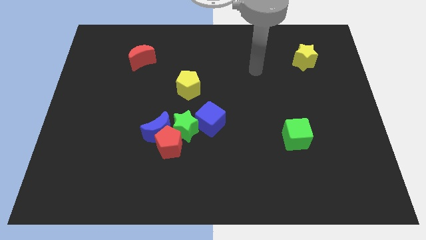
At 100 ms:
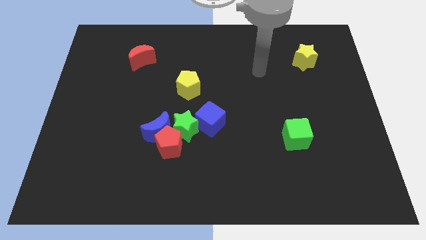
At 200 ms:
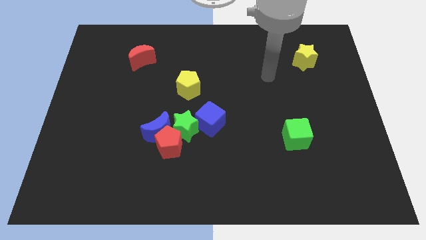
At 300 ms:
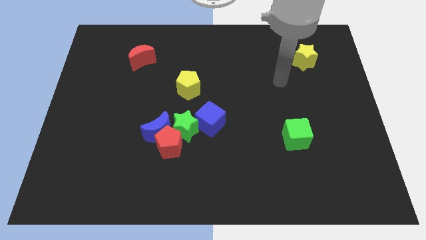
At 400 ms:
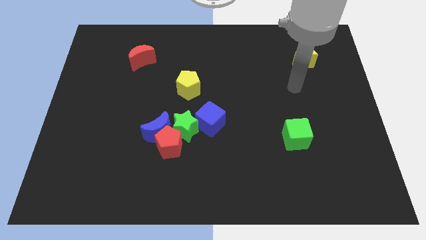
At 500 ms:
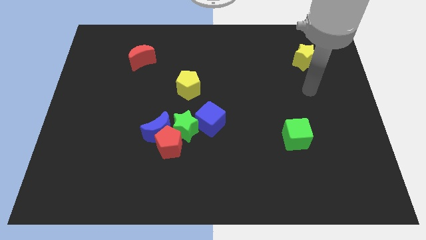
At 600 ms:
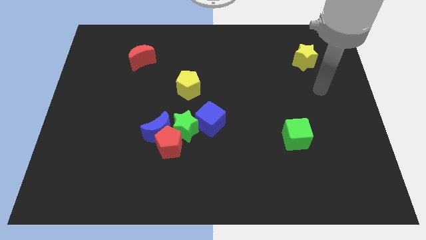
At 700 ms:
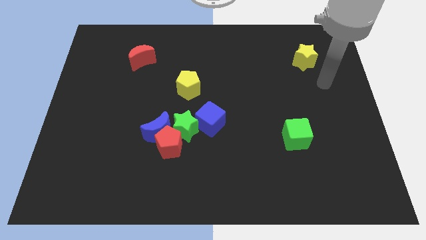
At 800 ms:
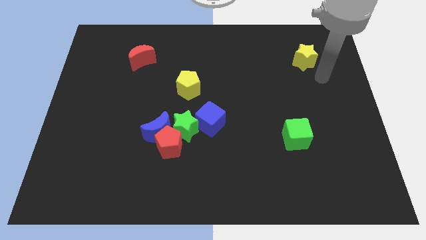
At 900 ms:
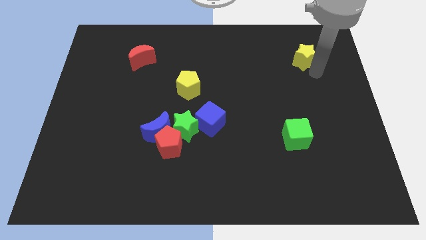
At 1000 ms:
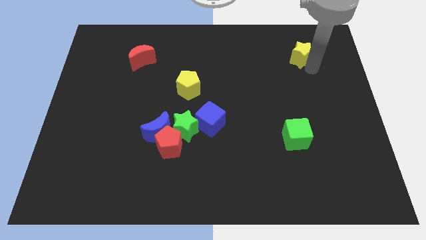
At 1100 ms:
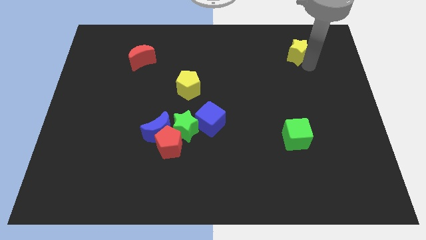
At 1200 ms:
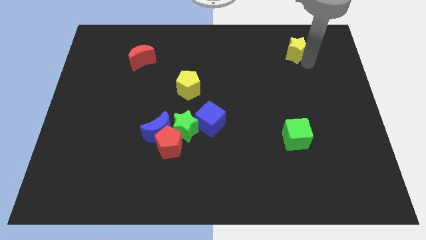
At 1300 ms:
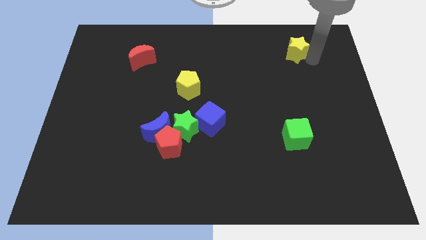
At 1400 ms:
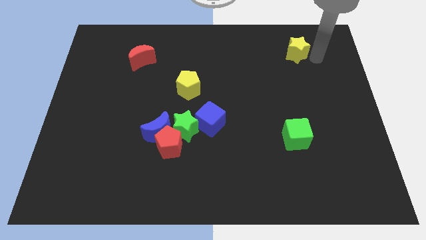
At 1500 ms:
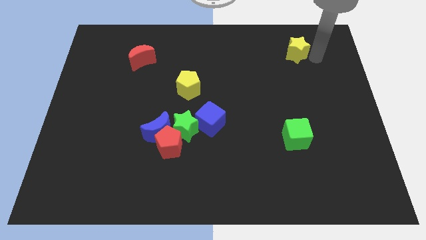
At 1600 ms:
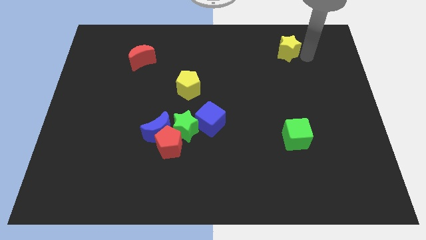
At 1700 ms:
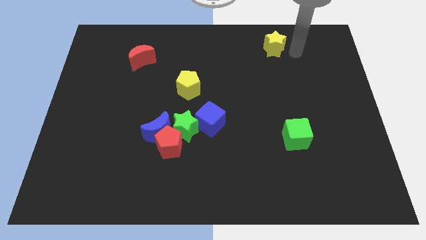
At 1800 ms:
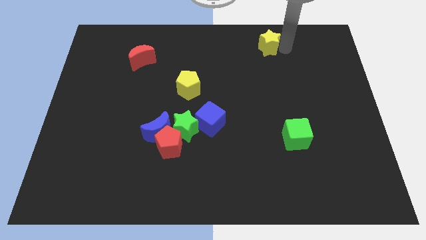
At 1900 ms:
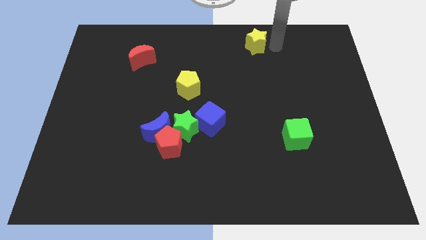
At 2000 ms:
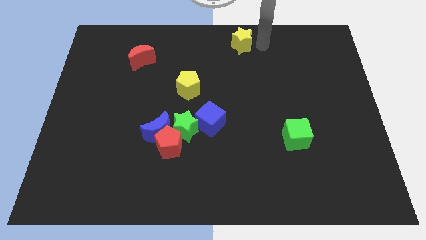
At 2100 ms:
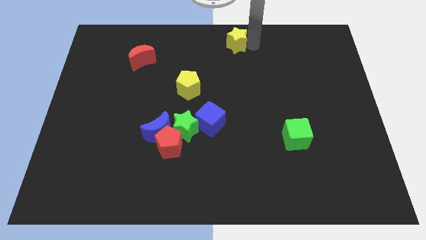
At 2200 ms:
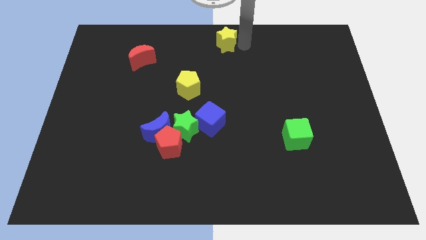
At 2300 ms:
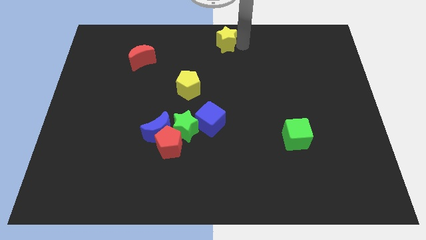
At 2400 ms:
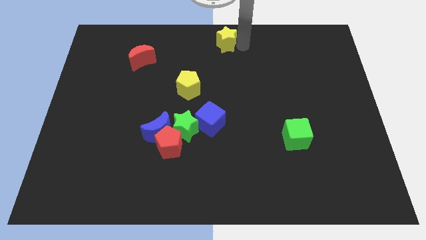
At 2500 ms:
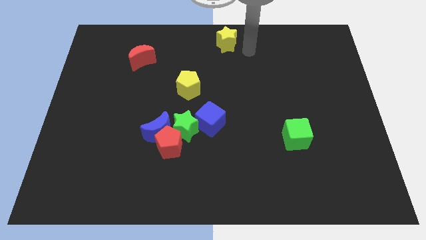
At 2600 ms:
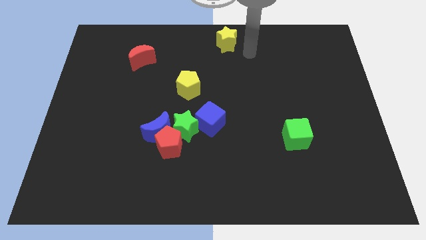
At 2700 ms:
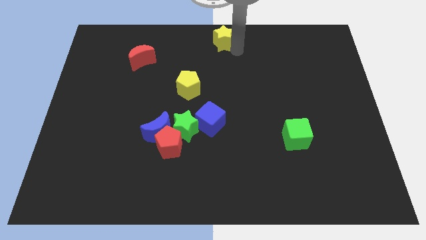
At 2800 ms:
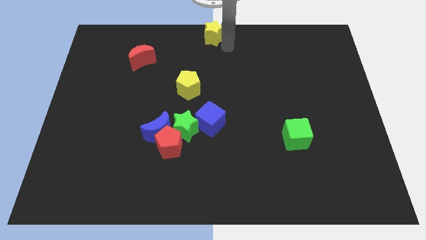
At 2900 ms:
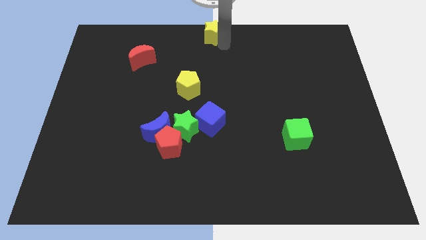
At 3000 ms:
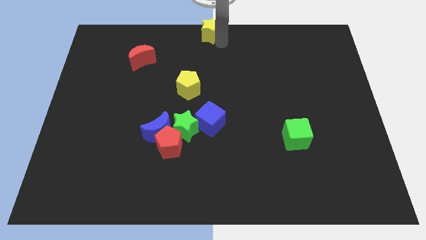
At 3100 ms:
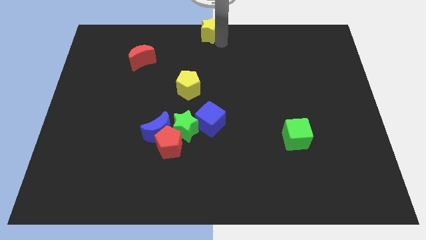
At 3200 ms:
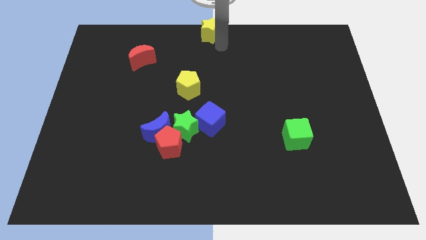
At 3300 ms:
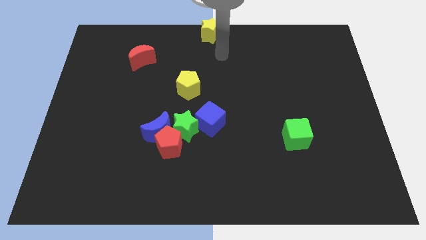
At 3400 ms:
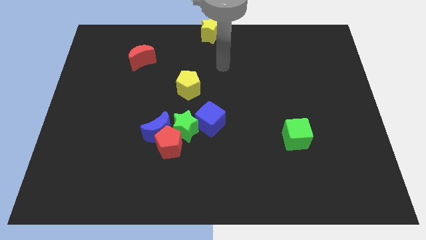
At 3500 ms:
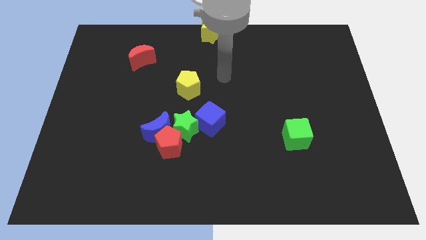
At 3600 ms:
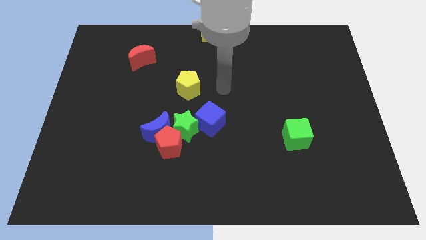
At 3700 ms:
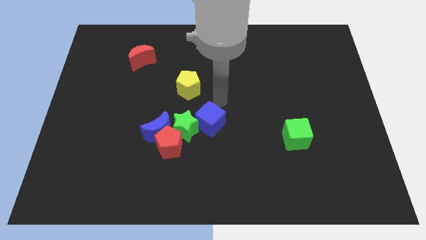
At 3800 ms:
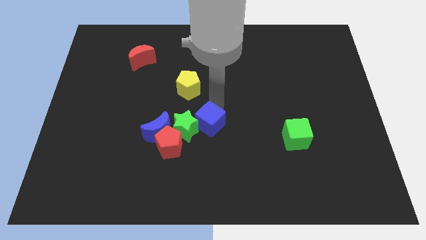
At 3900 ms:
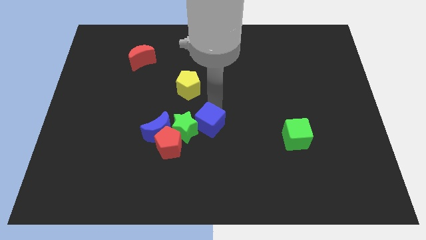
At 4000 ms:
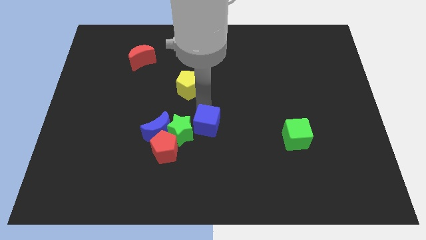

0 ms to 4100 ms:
move yellow star to the top center of the board

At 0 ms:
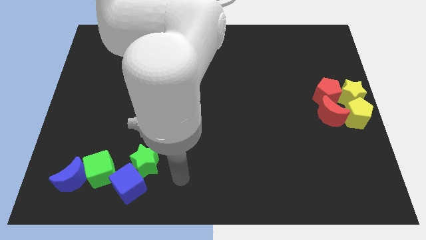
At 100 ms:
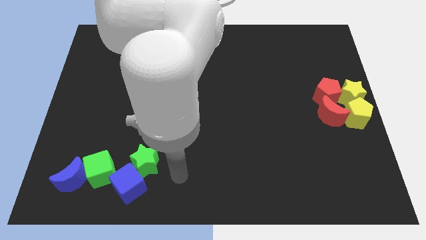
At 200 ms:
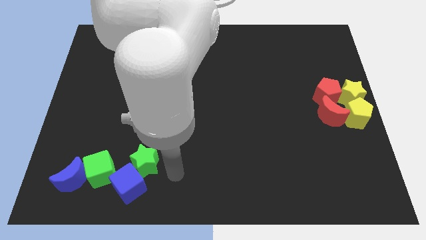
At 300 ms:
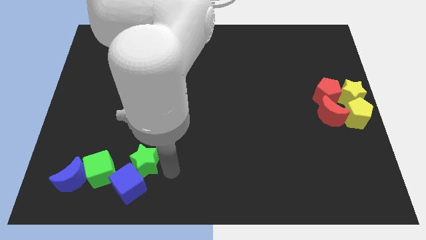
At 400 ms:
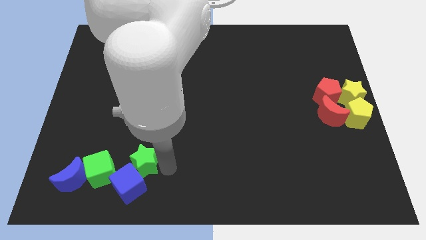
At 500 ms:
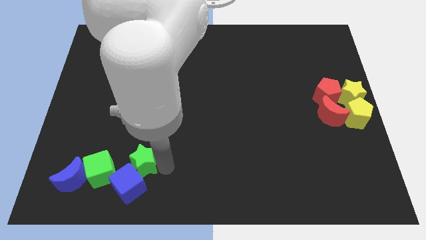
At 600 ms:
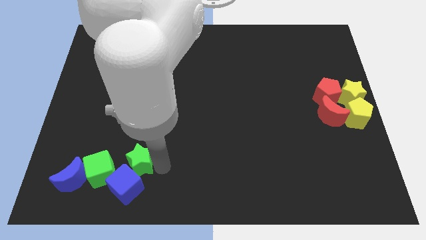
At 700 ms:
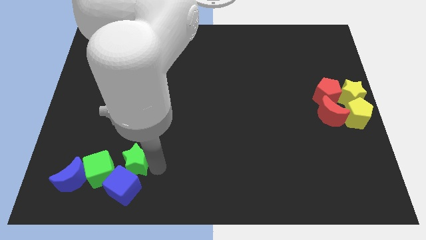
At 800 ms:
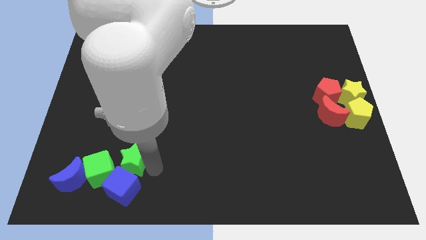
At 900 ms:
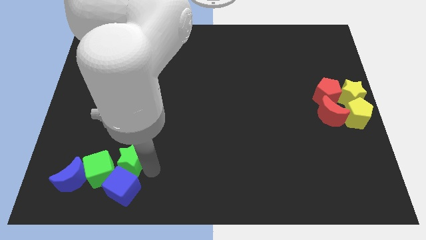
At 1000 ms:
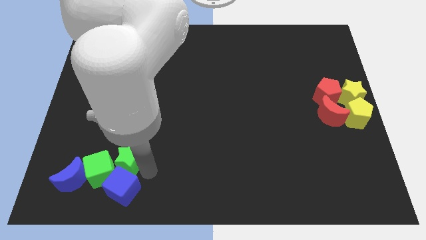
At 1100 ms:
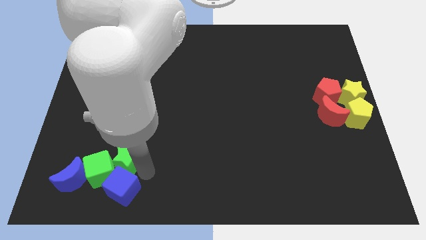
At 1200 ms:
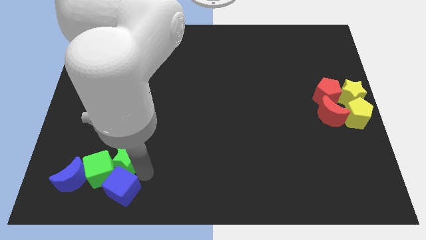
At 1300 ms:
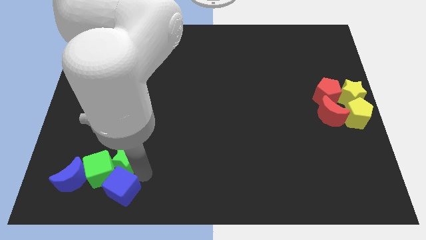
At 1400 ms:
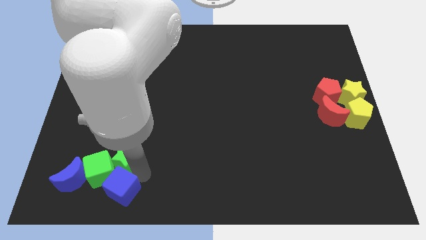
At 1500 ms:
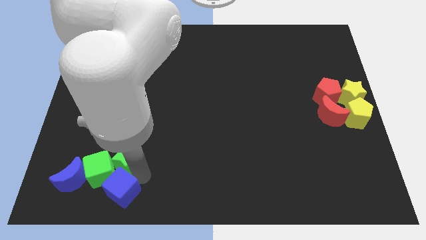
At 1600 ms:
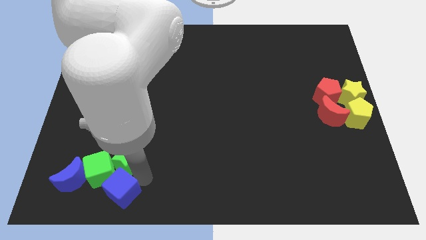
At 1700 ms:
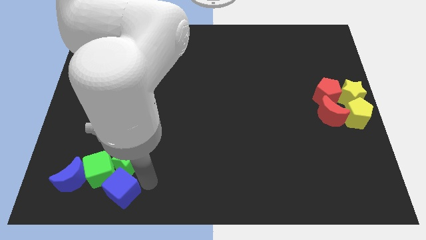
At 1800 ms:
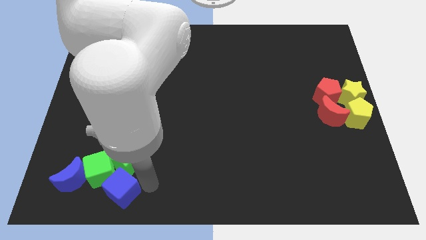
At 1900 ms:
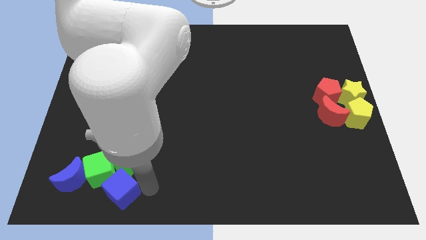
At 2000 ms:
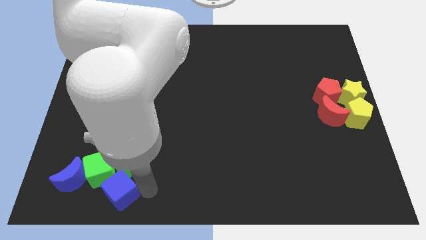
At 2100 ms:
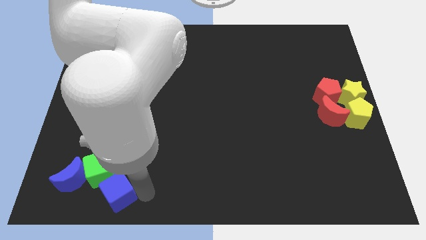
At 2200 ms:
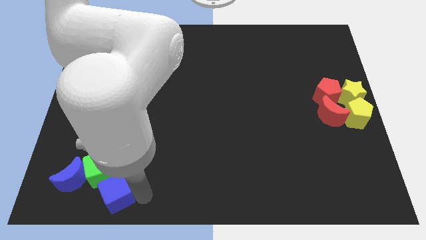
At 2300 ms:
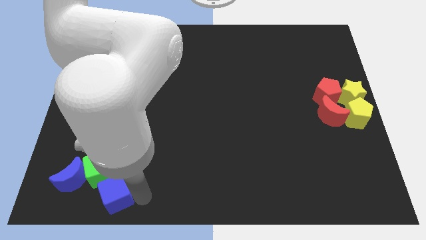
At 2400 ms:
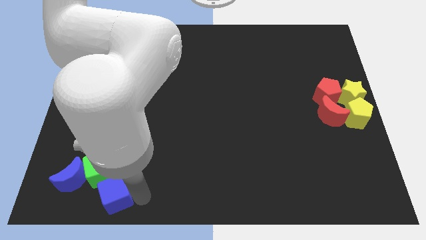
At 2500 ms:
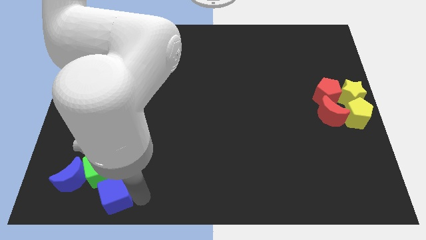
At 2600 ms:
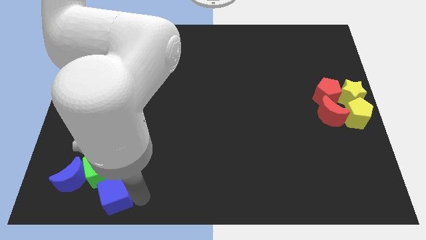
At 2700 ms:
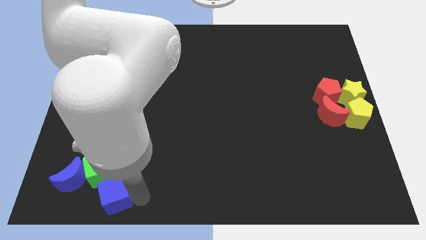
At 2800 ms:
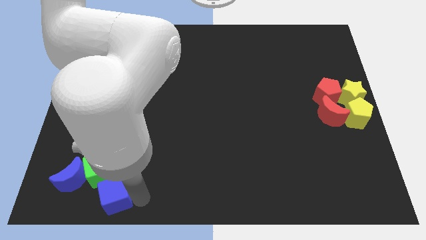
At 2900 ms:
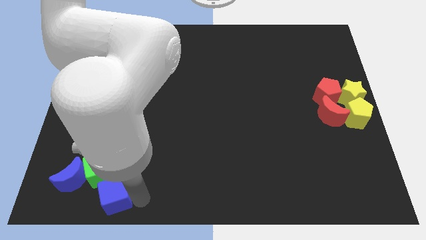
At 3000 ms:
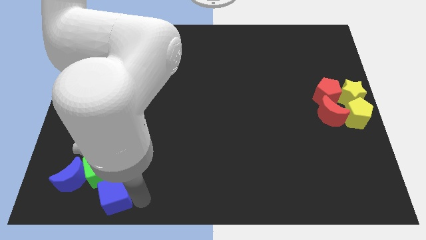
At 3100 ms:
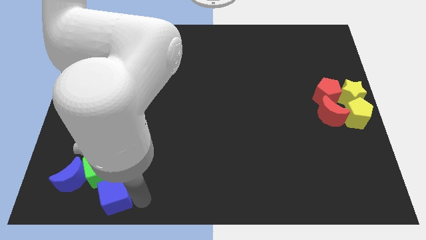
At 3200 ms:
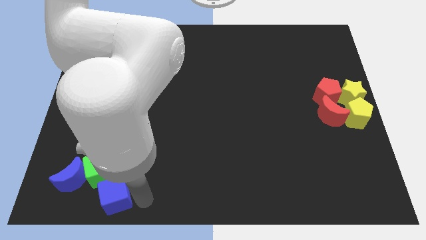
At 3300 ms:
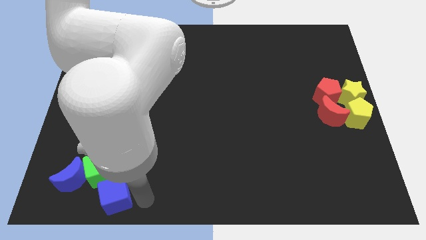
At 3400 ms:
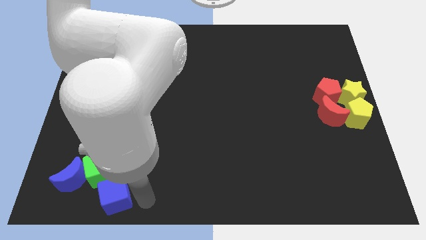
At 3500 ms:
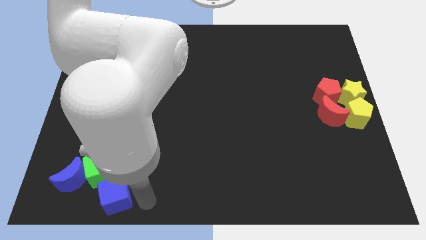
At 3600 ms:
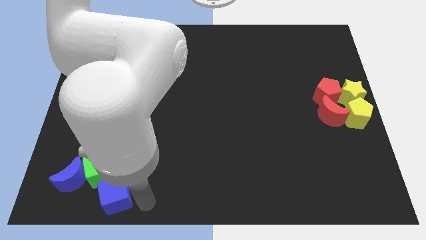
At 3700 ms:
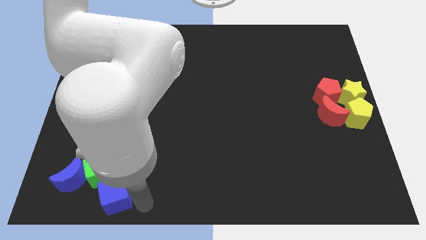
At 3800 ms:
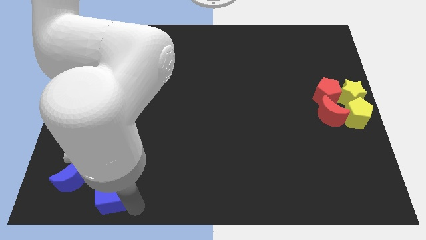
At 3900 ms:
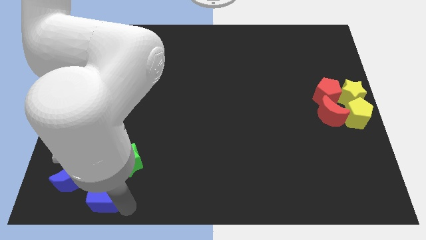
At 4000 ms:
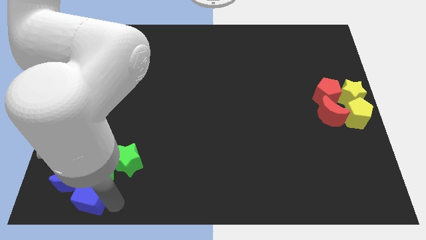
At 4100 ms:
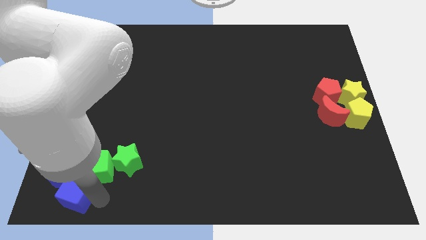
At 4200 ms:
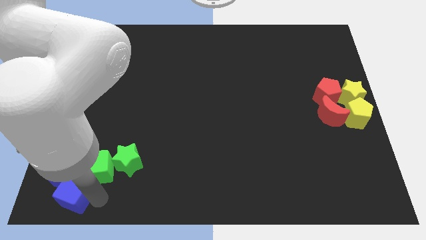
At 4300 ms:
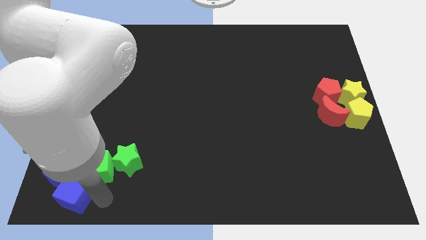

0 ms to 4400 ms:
slightly adjust blue cube to the bottom of blue moon

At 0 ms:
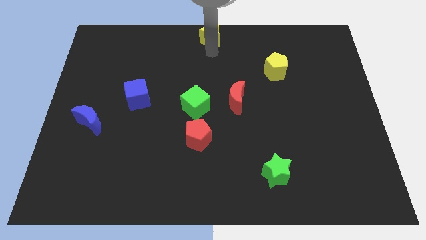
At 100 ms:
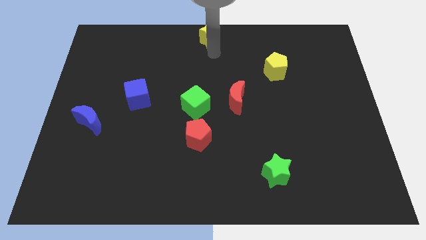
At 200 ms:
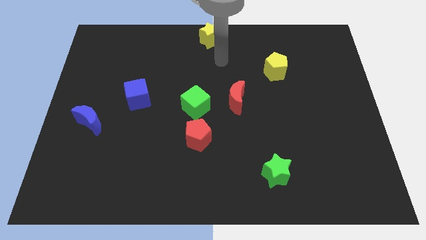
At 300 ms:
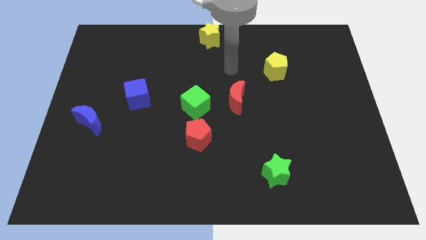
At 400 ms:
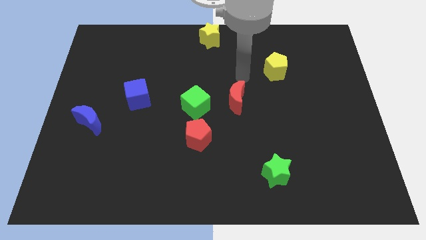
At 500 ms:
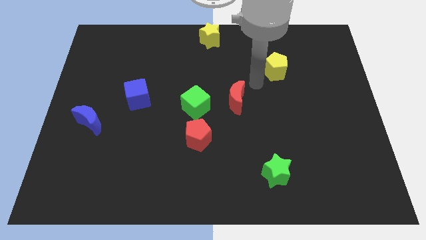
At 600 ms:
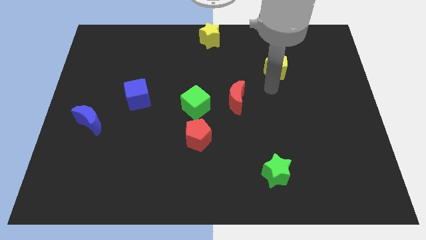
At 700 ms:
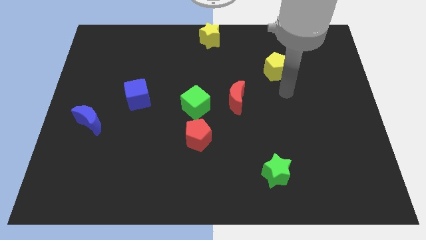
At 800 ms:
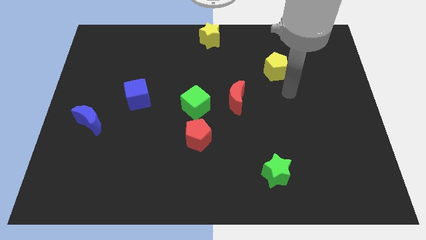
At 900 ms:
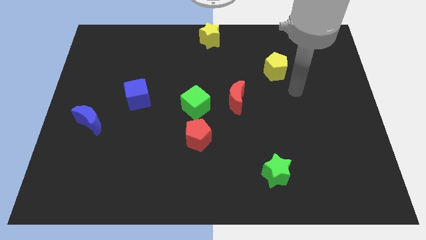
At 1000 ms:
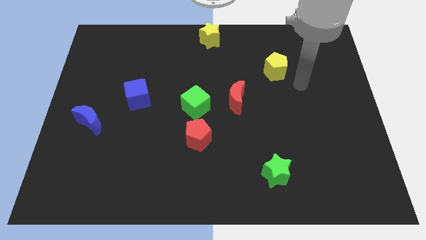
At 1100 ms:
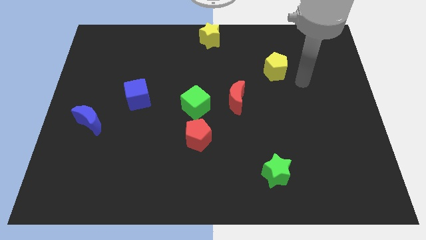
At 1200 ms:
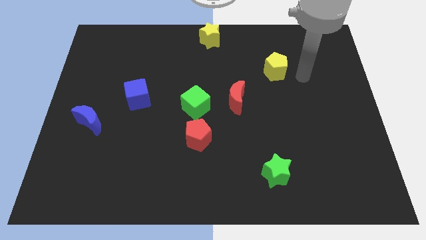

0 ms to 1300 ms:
move your arm away from the yellow star
